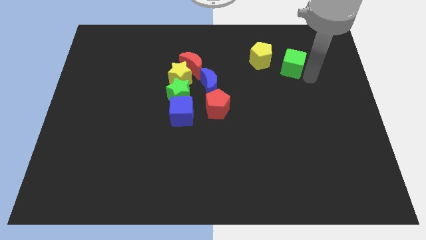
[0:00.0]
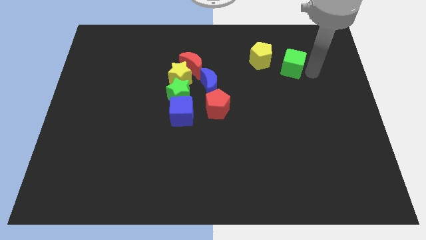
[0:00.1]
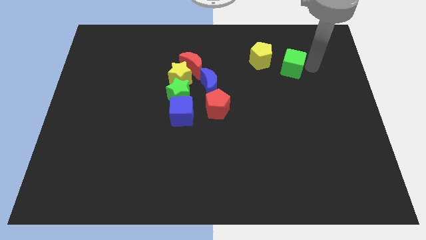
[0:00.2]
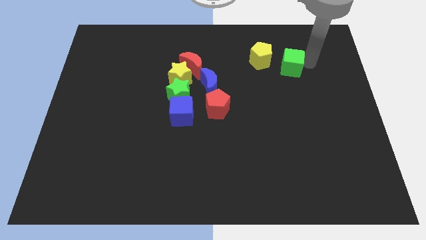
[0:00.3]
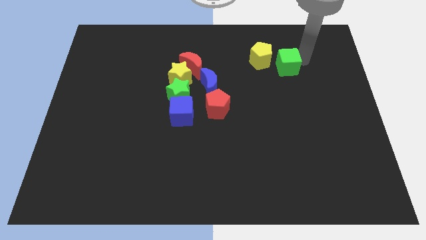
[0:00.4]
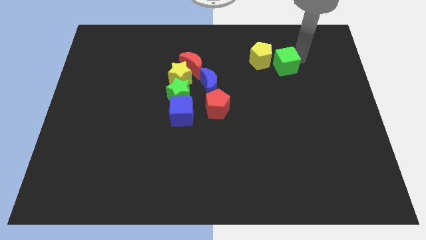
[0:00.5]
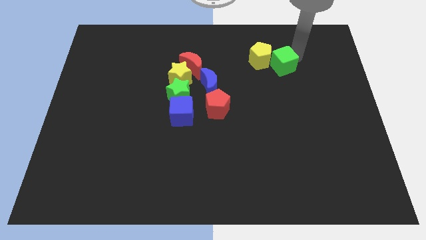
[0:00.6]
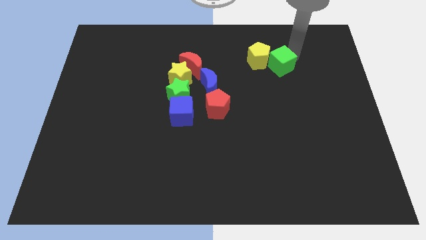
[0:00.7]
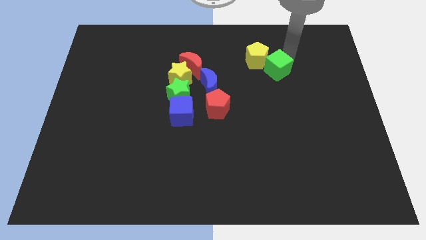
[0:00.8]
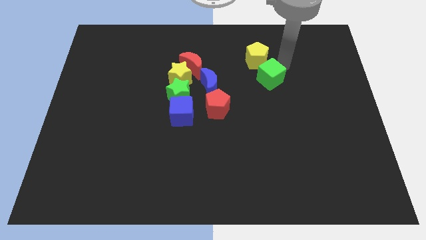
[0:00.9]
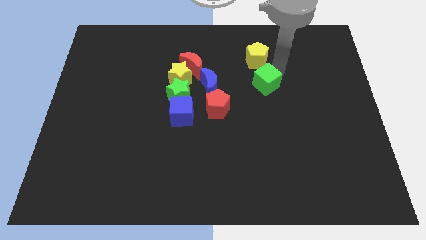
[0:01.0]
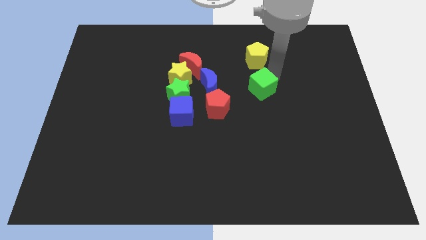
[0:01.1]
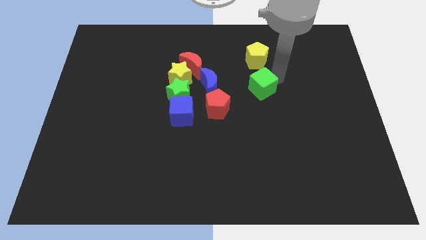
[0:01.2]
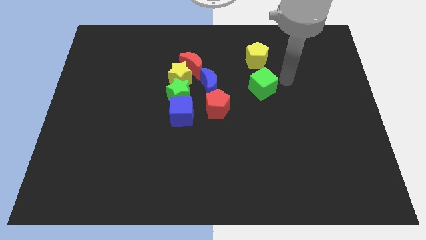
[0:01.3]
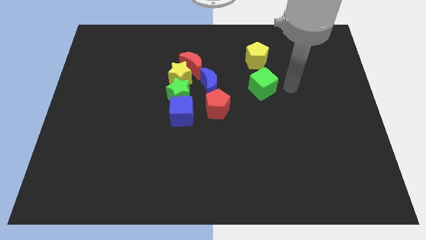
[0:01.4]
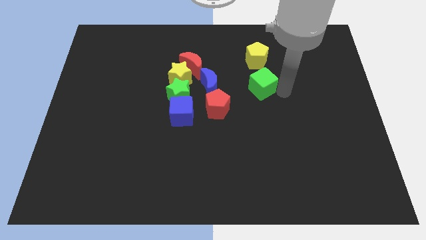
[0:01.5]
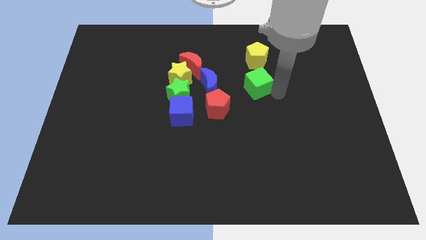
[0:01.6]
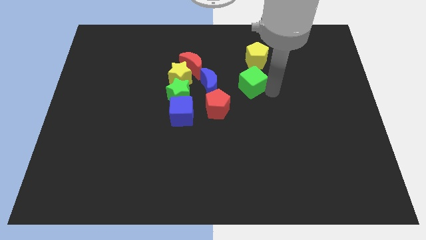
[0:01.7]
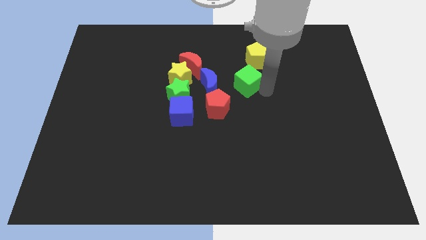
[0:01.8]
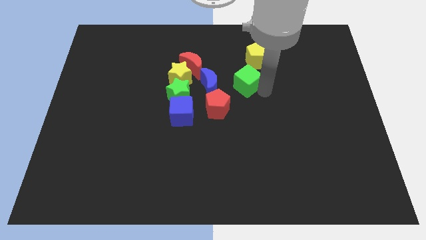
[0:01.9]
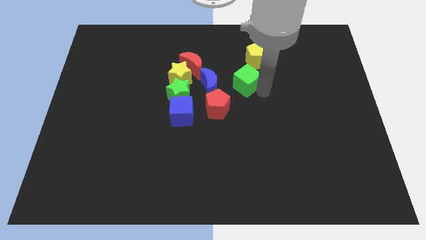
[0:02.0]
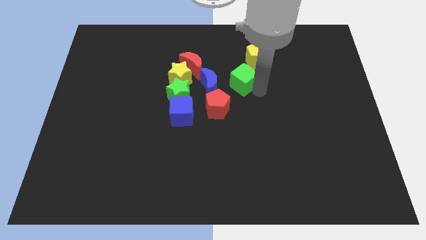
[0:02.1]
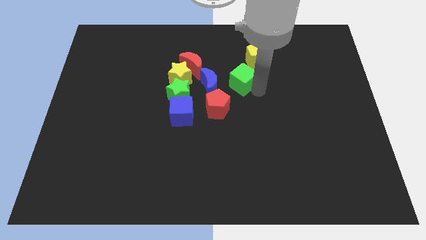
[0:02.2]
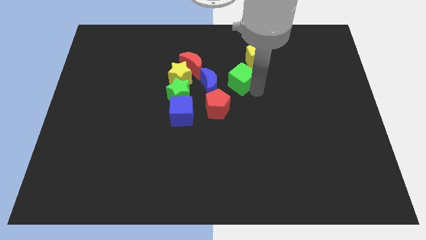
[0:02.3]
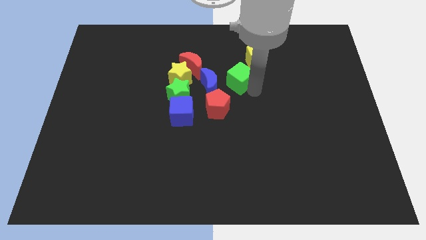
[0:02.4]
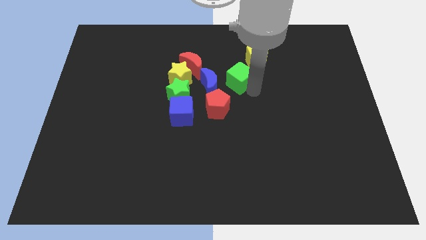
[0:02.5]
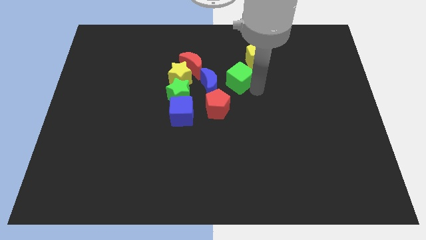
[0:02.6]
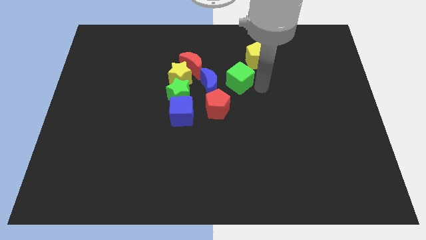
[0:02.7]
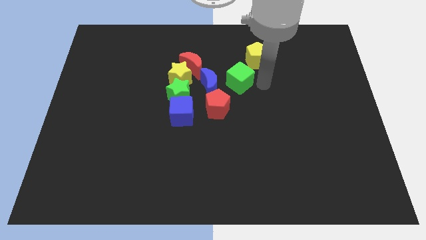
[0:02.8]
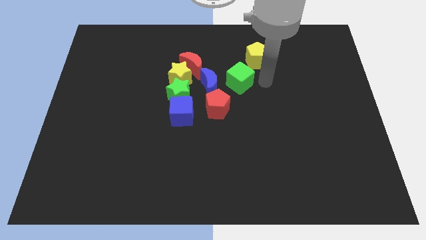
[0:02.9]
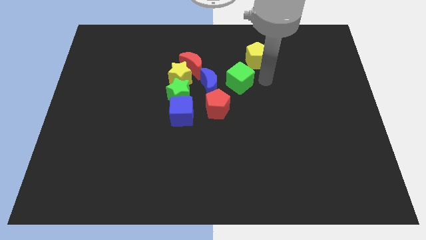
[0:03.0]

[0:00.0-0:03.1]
move green cube right to the blue crescent

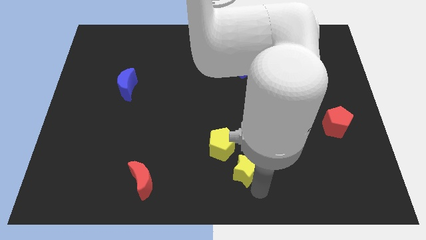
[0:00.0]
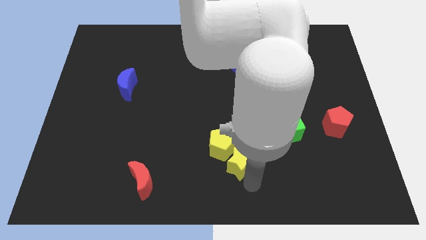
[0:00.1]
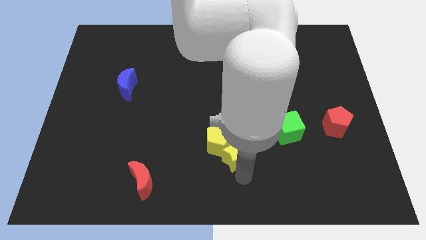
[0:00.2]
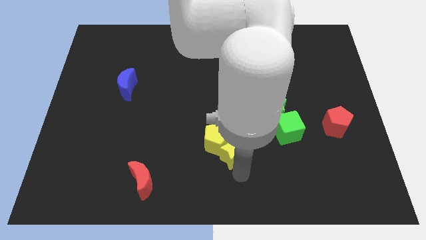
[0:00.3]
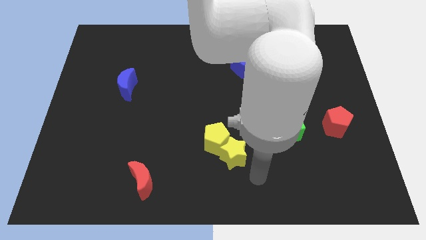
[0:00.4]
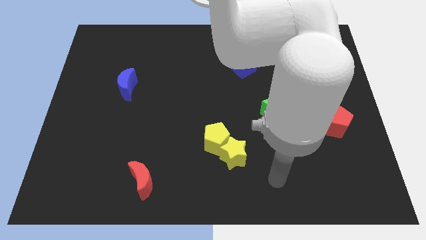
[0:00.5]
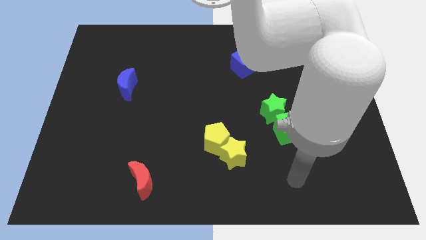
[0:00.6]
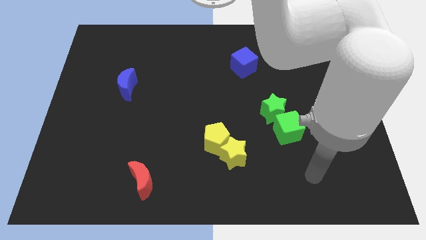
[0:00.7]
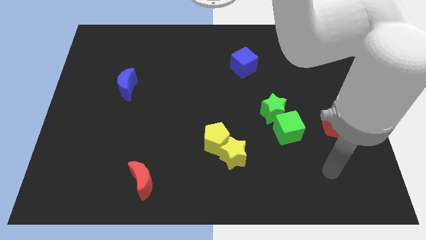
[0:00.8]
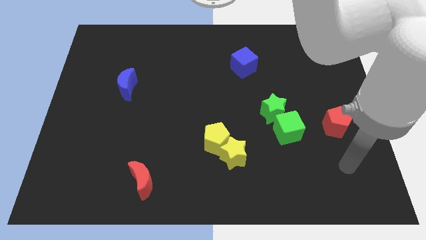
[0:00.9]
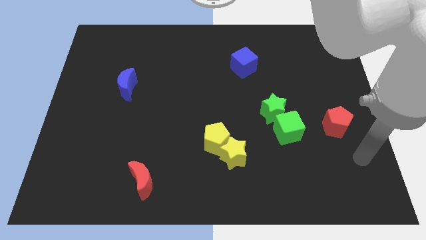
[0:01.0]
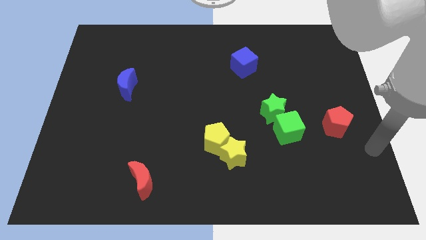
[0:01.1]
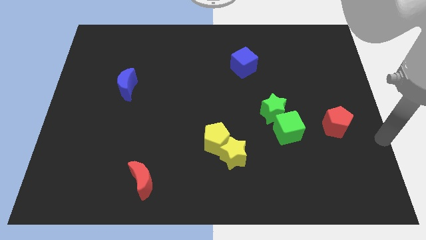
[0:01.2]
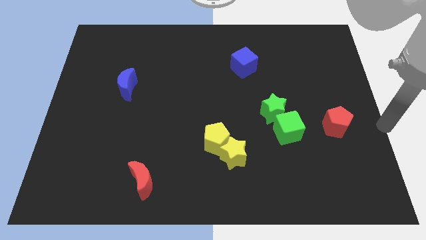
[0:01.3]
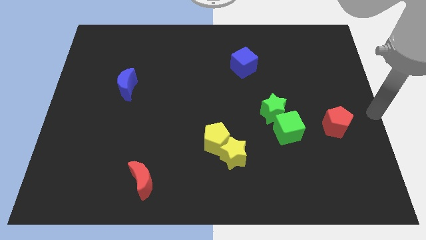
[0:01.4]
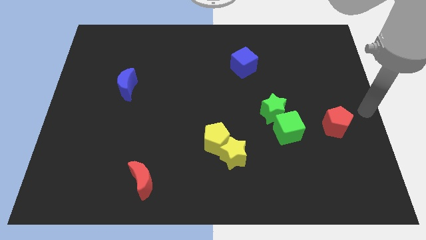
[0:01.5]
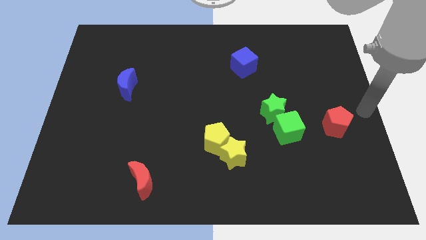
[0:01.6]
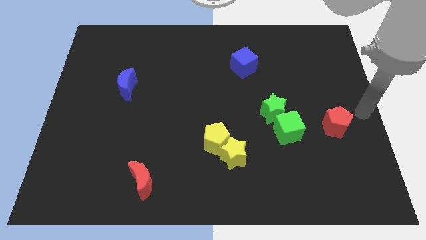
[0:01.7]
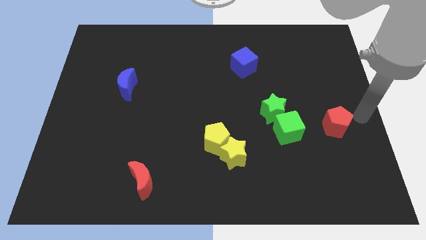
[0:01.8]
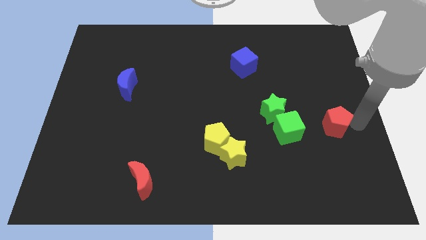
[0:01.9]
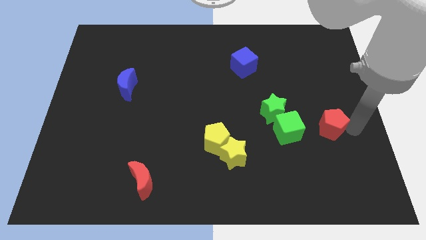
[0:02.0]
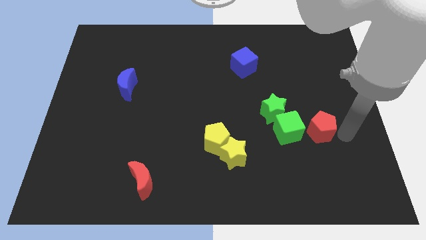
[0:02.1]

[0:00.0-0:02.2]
move the arm around the red pentagon

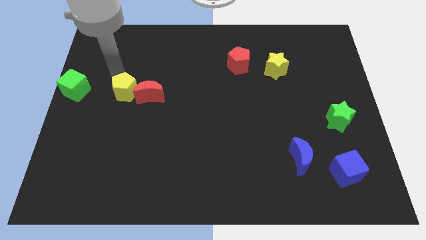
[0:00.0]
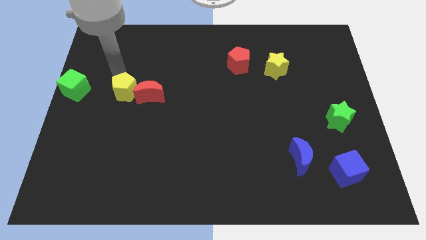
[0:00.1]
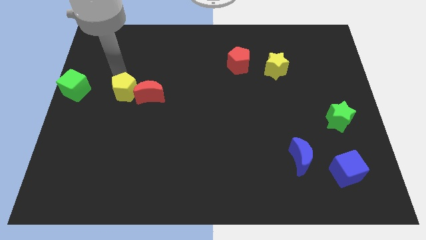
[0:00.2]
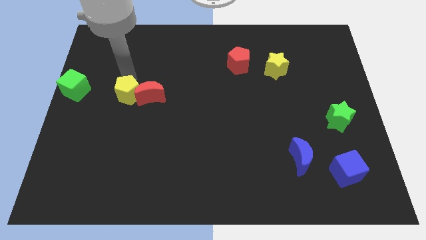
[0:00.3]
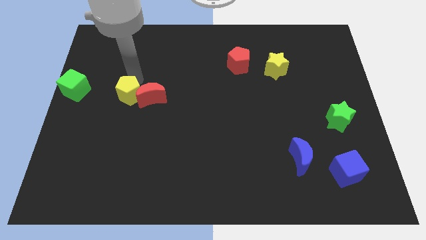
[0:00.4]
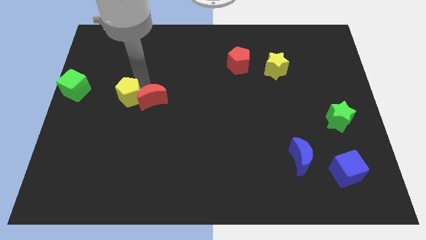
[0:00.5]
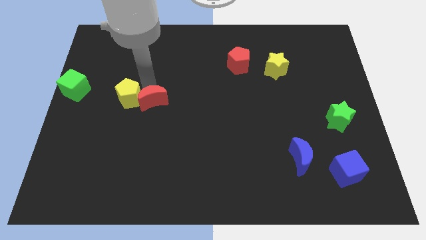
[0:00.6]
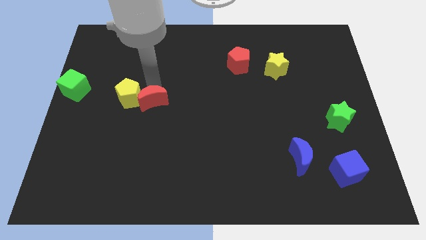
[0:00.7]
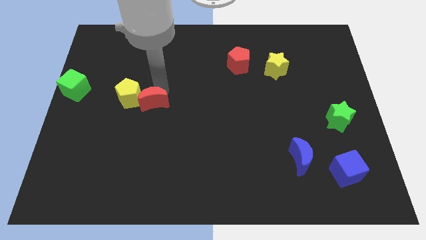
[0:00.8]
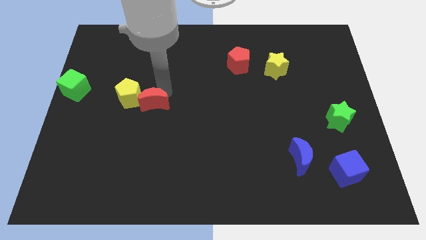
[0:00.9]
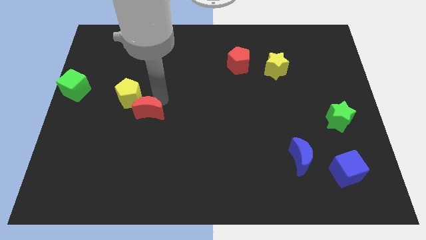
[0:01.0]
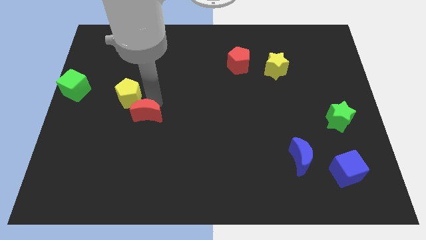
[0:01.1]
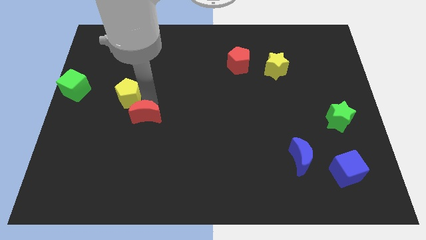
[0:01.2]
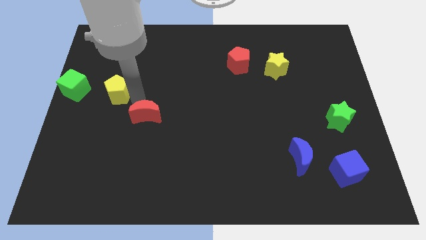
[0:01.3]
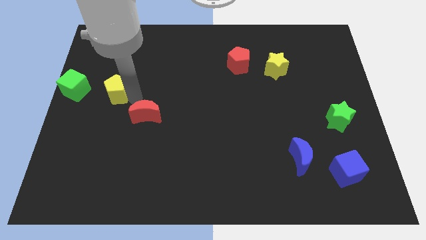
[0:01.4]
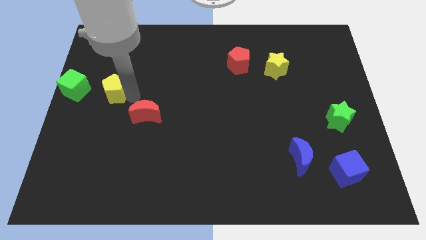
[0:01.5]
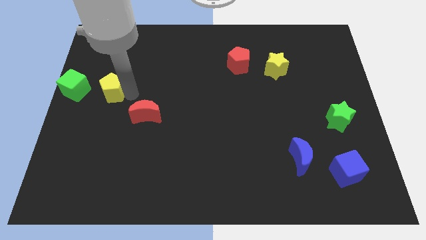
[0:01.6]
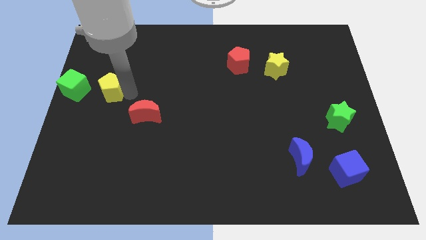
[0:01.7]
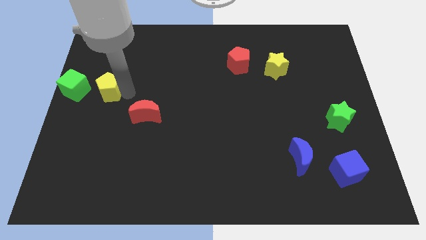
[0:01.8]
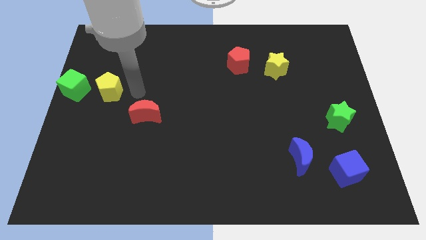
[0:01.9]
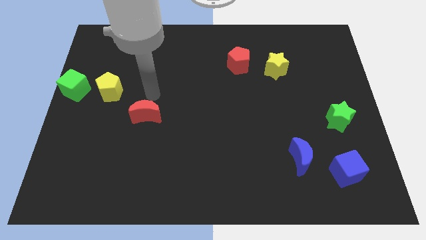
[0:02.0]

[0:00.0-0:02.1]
separate the yellow pentagon and red crescent

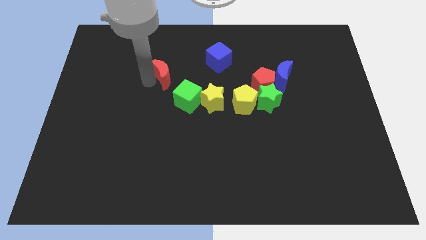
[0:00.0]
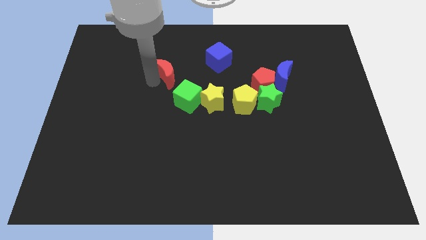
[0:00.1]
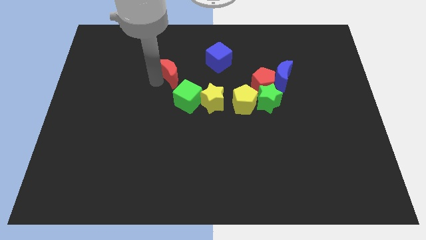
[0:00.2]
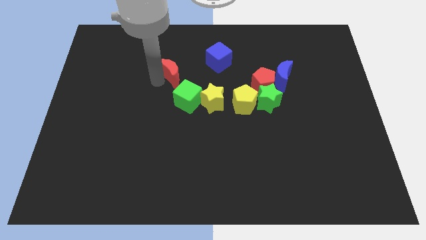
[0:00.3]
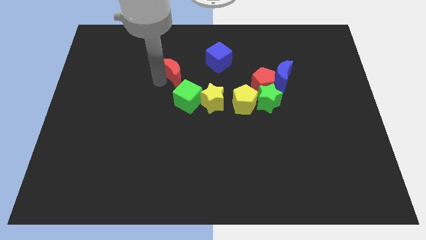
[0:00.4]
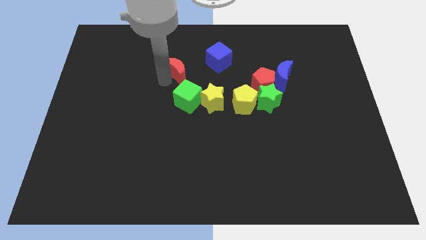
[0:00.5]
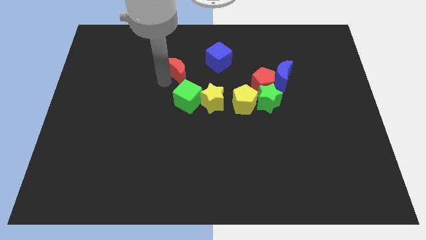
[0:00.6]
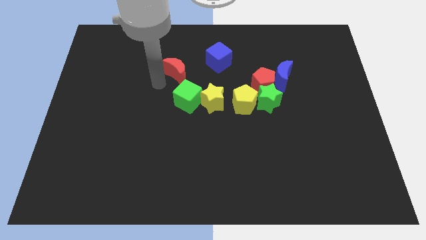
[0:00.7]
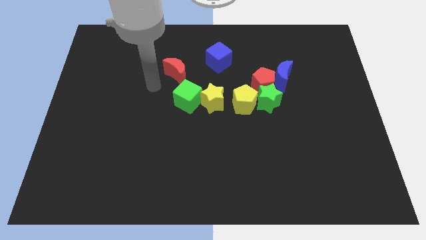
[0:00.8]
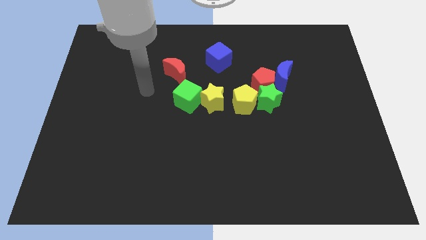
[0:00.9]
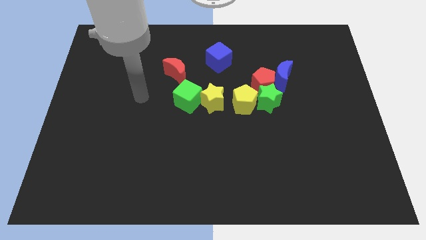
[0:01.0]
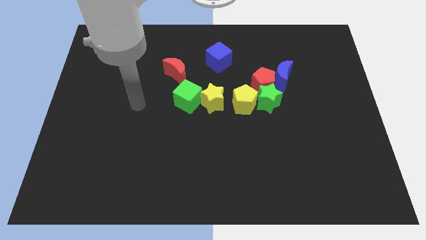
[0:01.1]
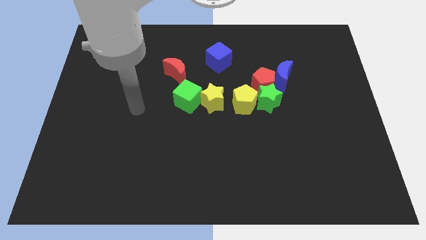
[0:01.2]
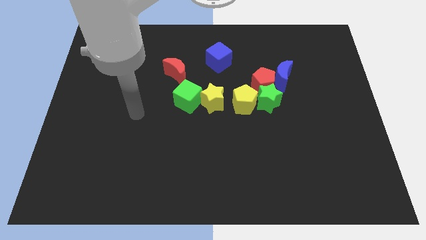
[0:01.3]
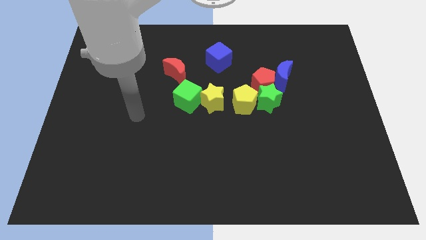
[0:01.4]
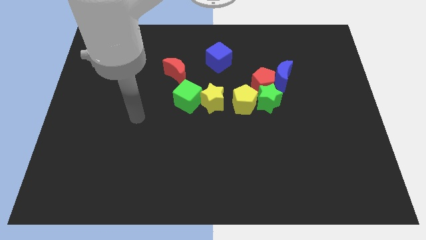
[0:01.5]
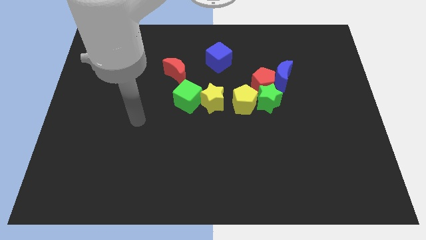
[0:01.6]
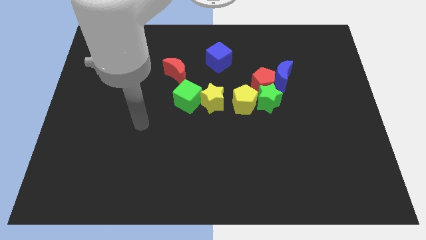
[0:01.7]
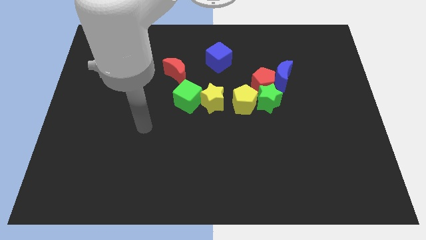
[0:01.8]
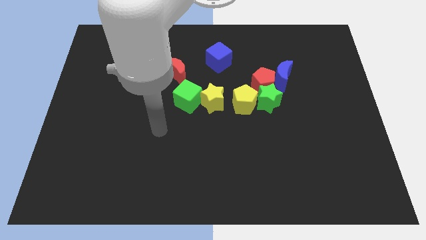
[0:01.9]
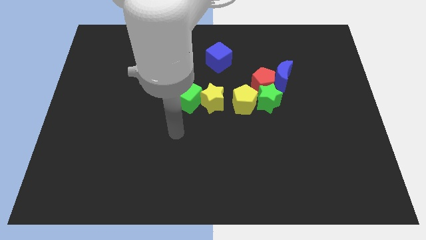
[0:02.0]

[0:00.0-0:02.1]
move red moon left above the green cube
